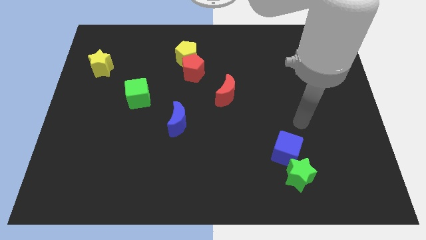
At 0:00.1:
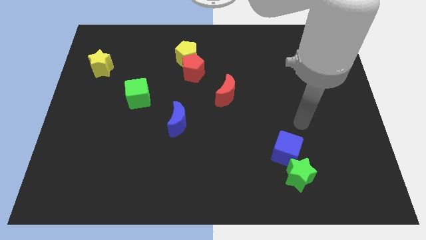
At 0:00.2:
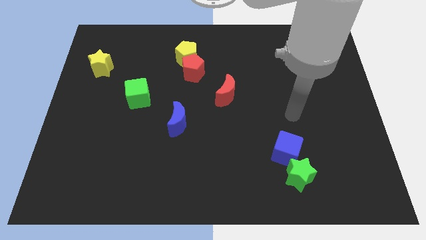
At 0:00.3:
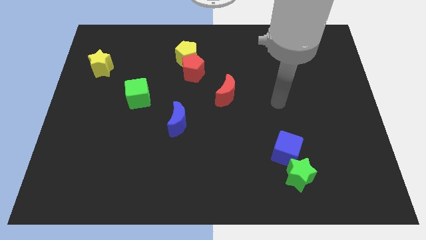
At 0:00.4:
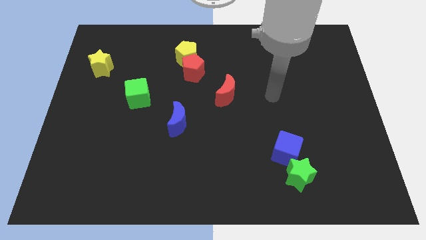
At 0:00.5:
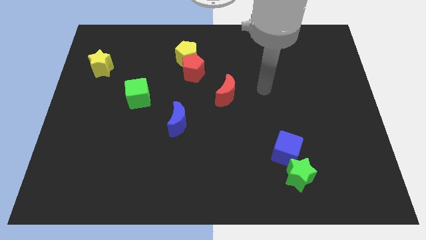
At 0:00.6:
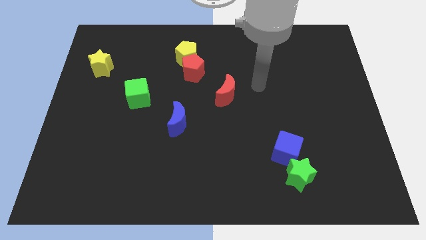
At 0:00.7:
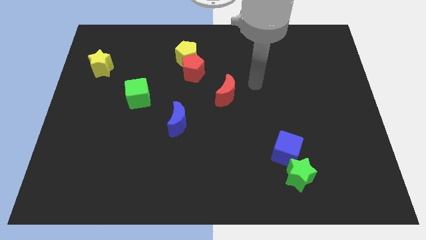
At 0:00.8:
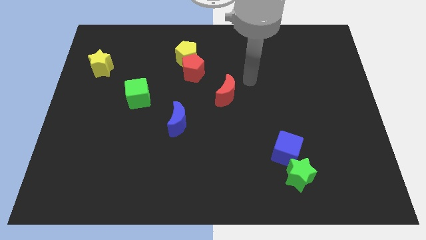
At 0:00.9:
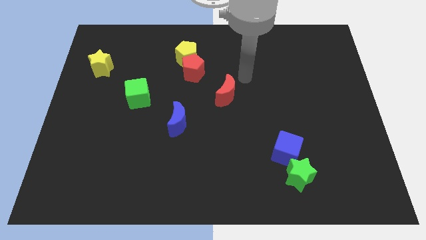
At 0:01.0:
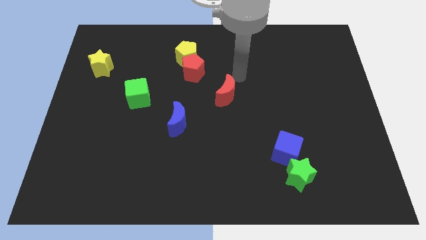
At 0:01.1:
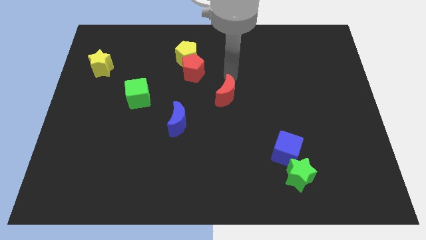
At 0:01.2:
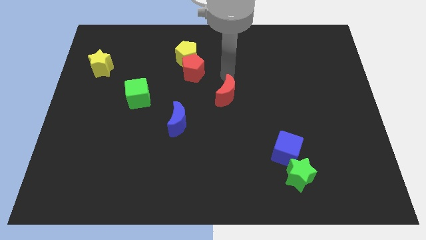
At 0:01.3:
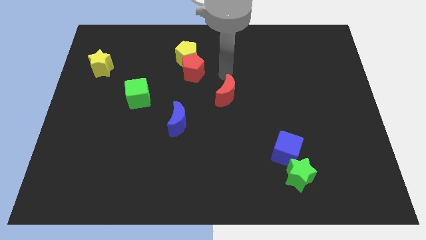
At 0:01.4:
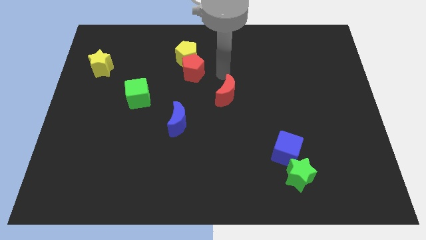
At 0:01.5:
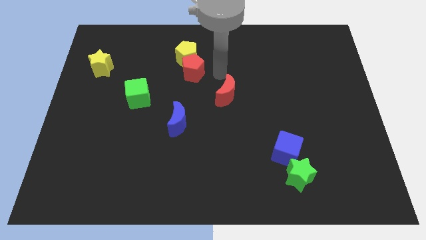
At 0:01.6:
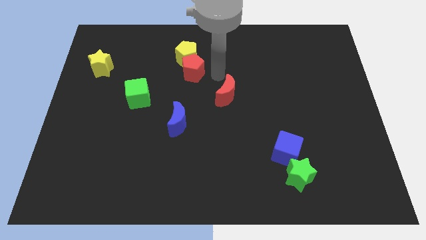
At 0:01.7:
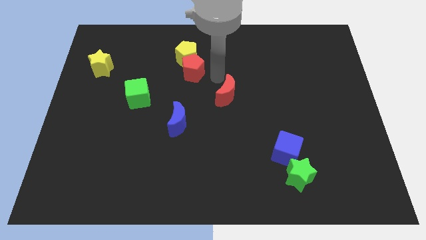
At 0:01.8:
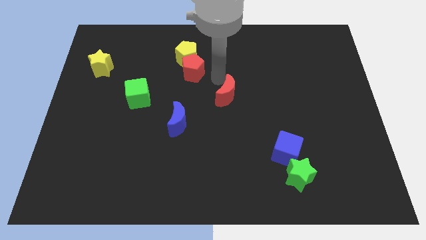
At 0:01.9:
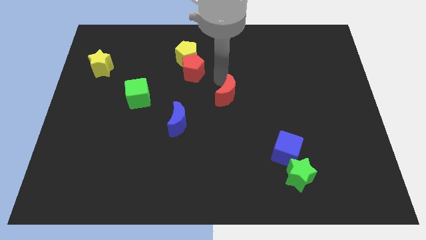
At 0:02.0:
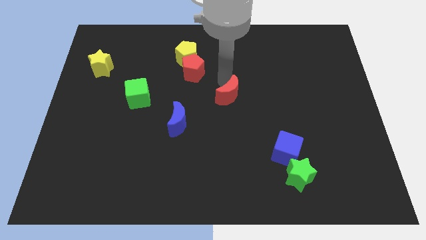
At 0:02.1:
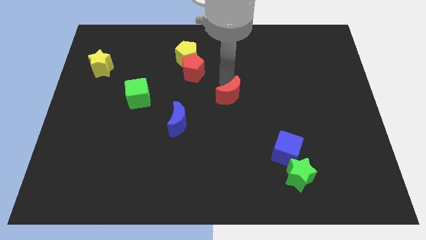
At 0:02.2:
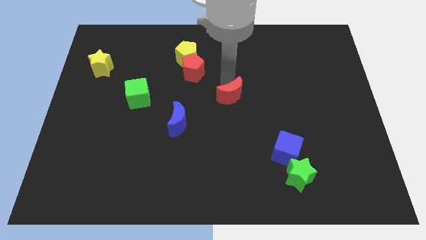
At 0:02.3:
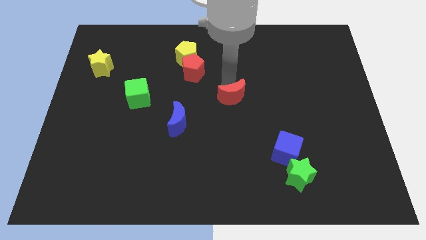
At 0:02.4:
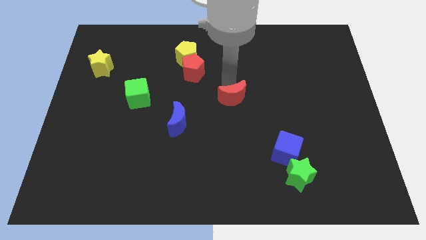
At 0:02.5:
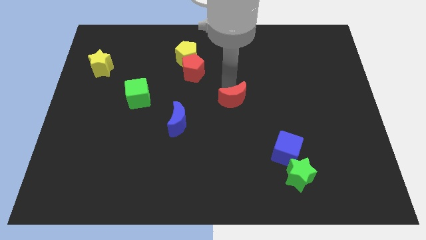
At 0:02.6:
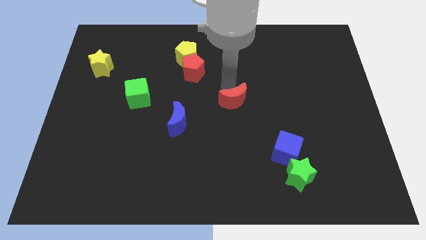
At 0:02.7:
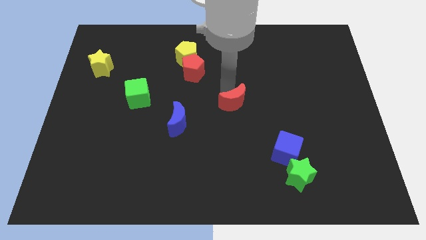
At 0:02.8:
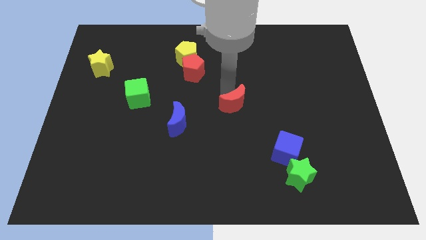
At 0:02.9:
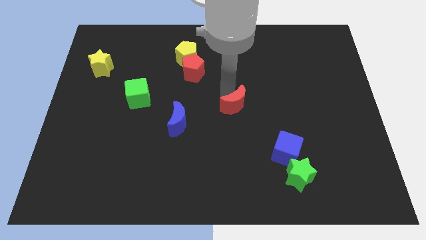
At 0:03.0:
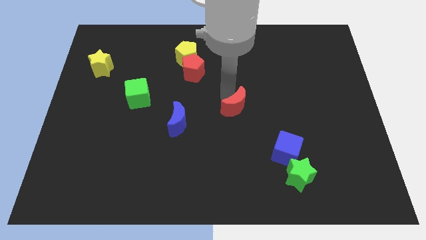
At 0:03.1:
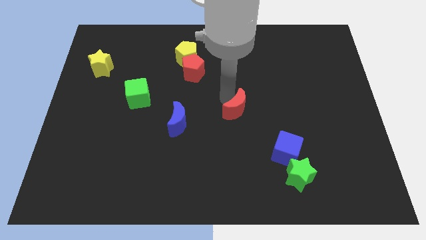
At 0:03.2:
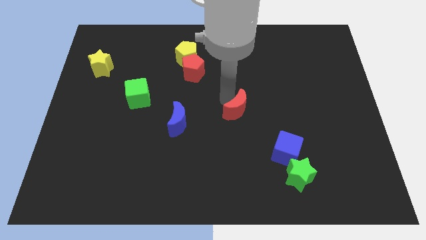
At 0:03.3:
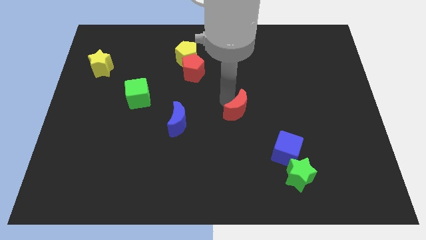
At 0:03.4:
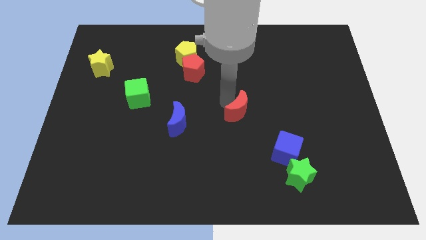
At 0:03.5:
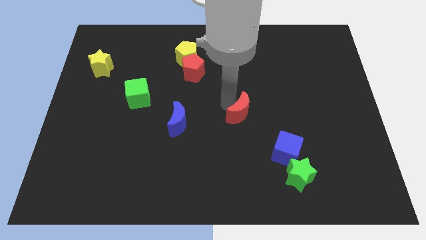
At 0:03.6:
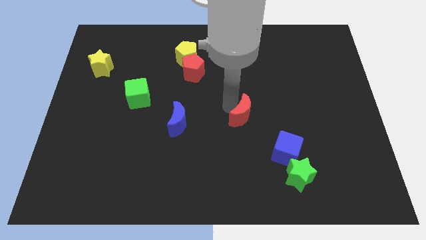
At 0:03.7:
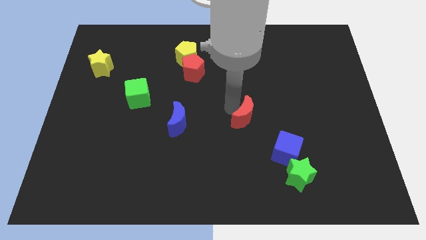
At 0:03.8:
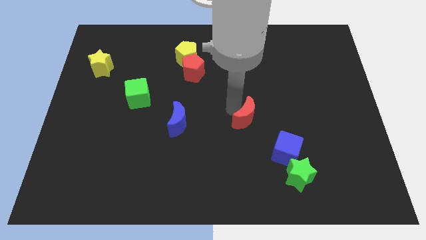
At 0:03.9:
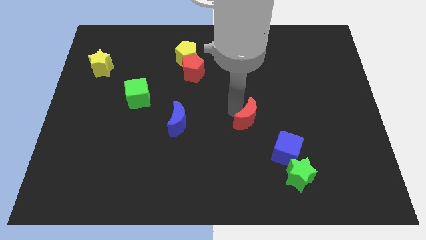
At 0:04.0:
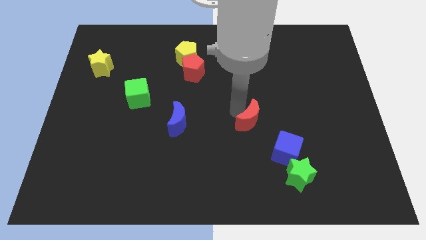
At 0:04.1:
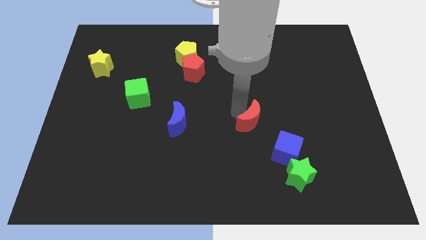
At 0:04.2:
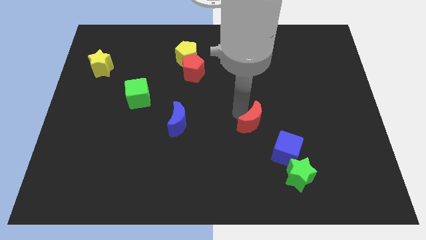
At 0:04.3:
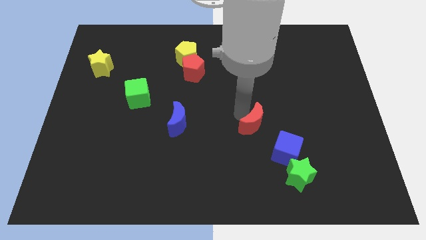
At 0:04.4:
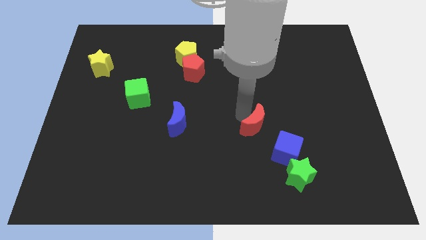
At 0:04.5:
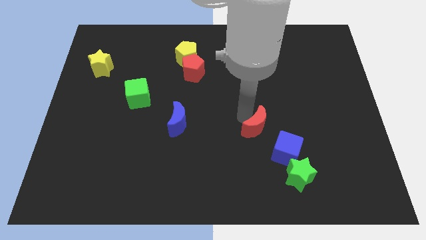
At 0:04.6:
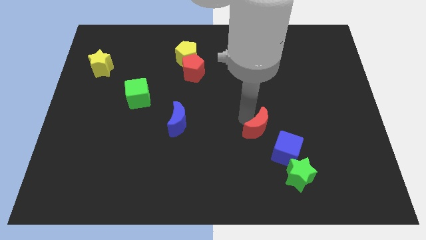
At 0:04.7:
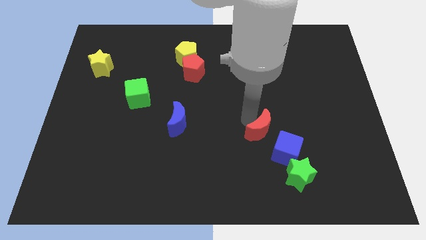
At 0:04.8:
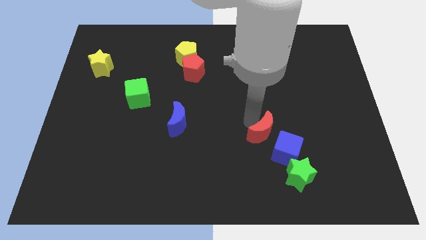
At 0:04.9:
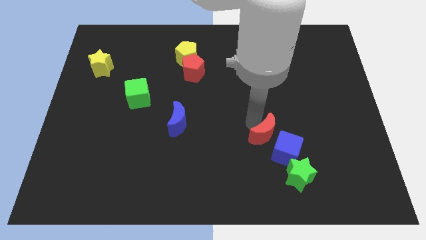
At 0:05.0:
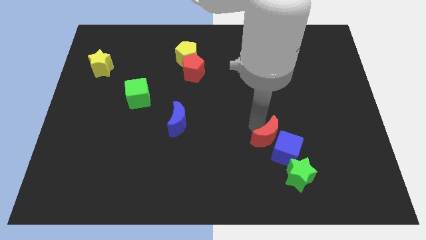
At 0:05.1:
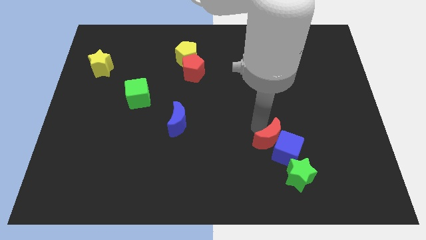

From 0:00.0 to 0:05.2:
slide the red moon close to the blue cube

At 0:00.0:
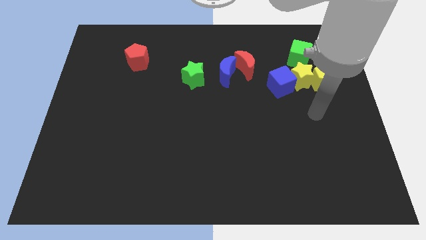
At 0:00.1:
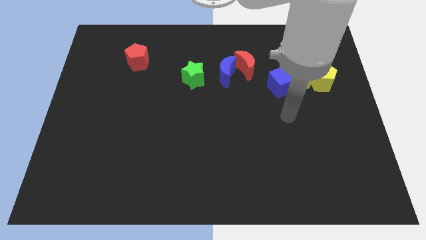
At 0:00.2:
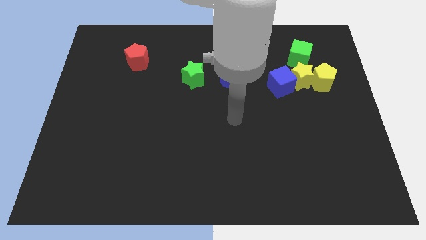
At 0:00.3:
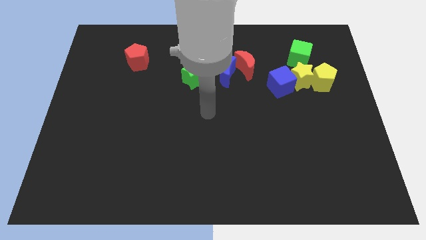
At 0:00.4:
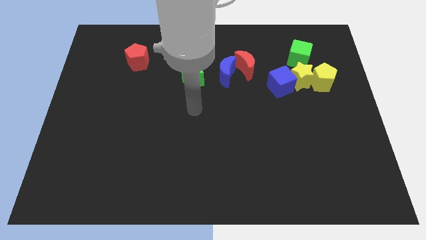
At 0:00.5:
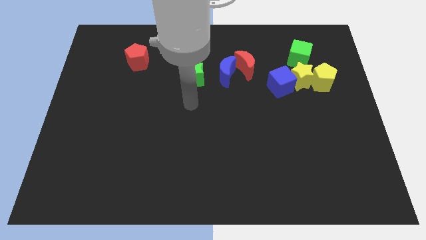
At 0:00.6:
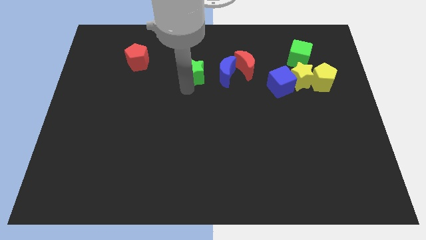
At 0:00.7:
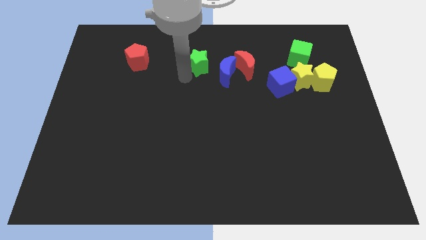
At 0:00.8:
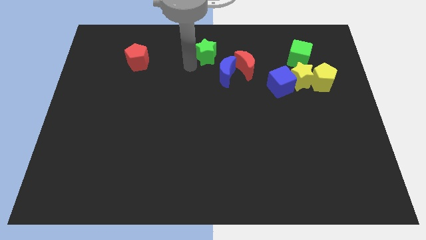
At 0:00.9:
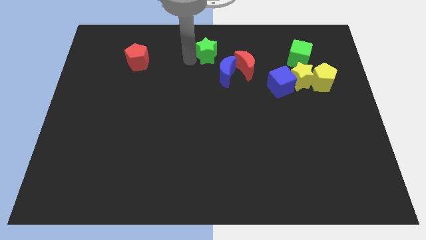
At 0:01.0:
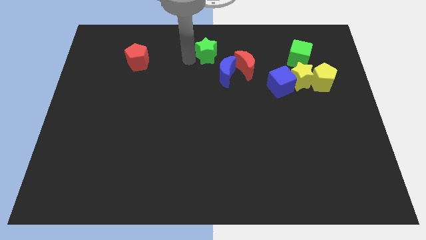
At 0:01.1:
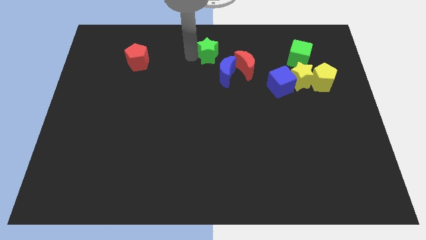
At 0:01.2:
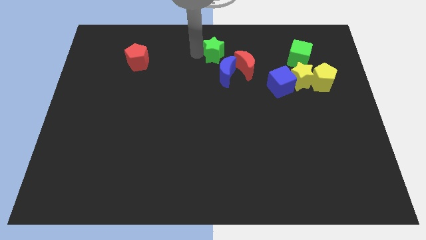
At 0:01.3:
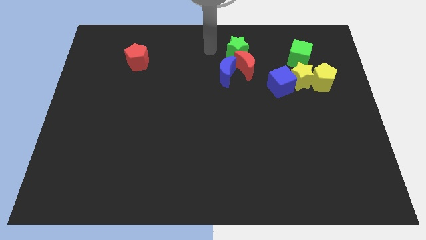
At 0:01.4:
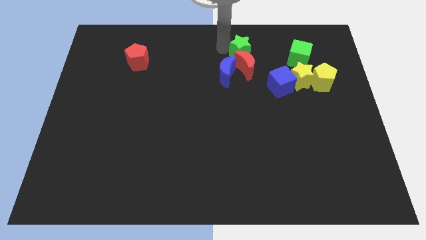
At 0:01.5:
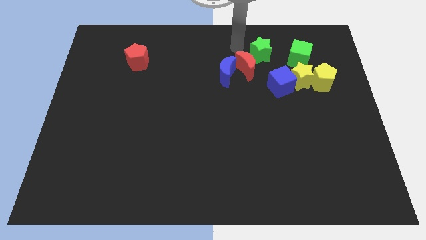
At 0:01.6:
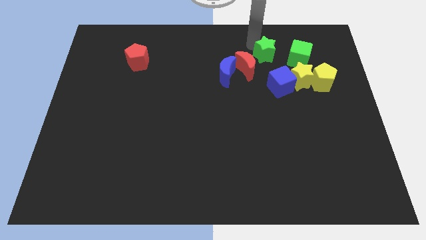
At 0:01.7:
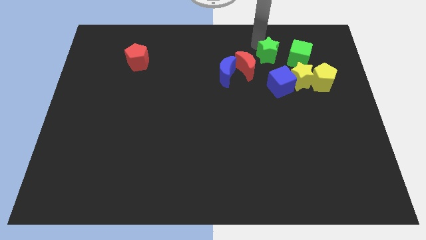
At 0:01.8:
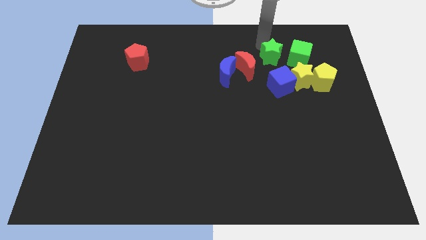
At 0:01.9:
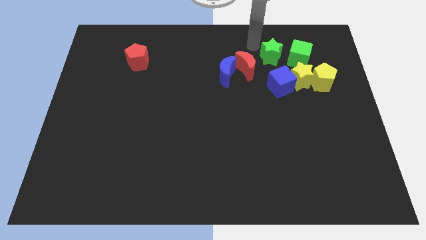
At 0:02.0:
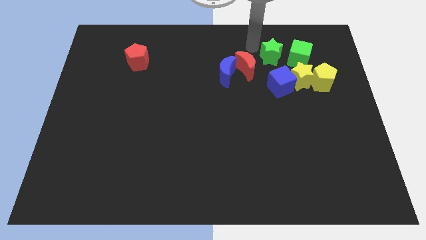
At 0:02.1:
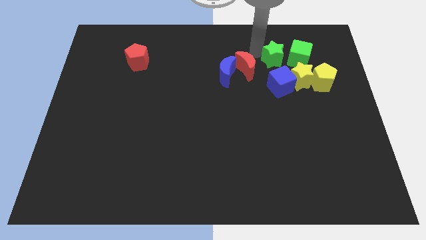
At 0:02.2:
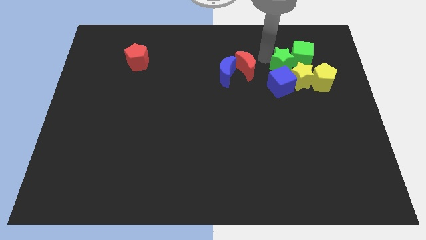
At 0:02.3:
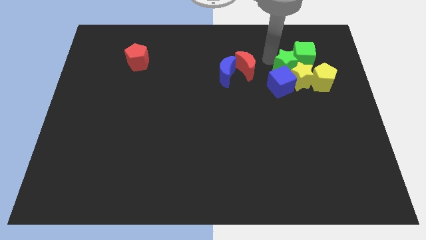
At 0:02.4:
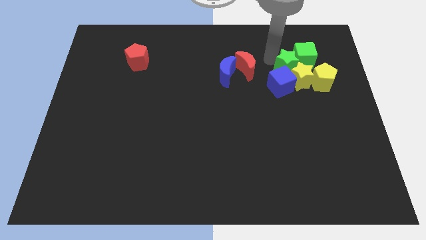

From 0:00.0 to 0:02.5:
move the green star towards the green cube

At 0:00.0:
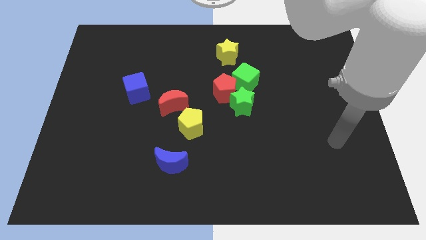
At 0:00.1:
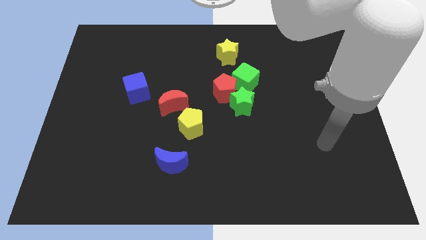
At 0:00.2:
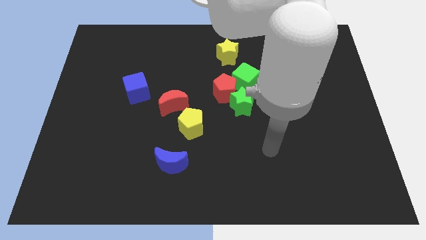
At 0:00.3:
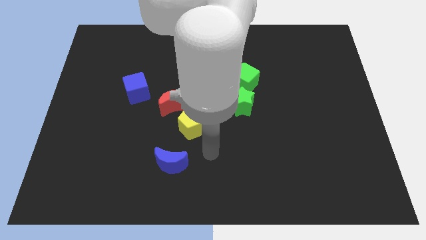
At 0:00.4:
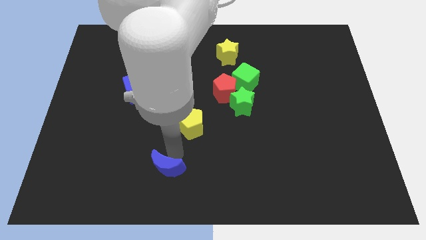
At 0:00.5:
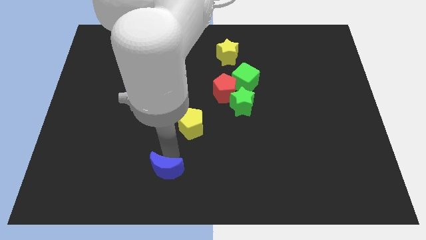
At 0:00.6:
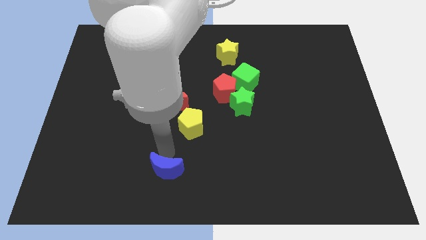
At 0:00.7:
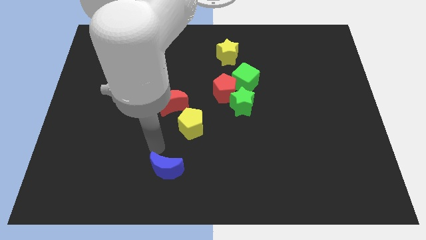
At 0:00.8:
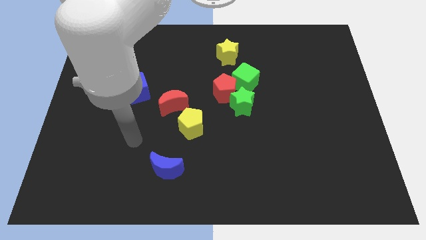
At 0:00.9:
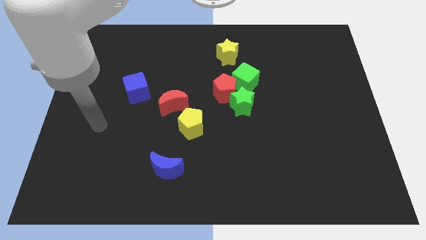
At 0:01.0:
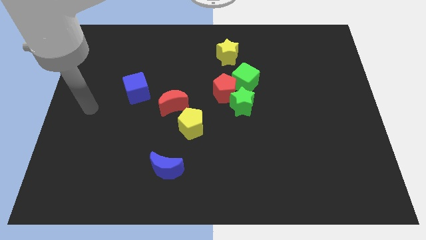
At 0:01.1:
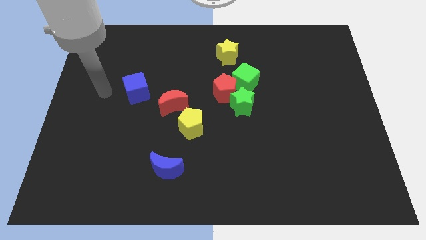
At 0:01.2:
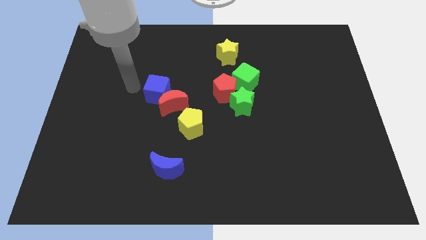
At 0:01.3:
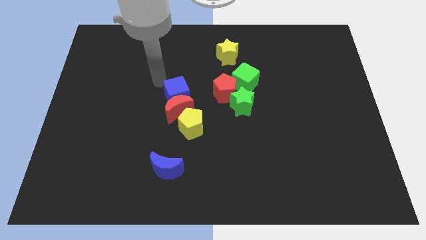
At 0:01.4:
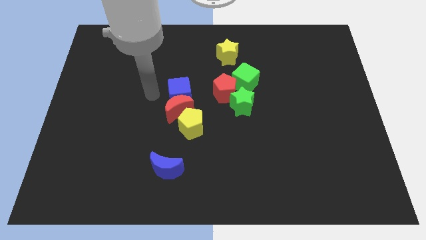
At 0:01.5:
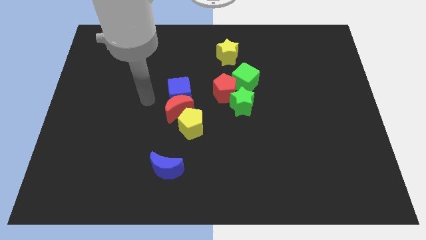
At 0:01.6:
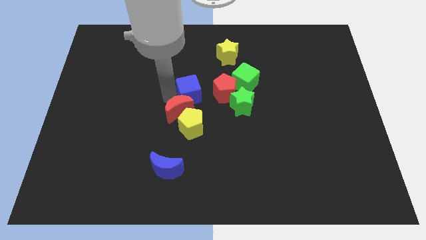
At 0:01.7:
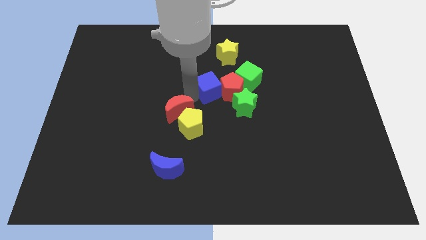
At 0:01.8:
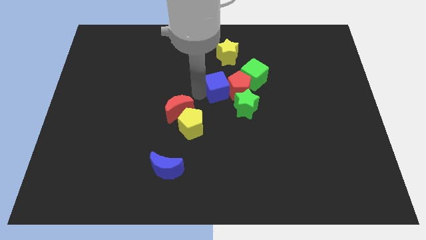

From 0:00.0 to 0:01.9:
push the blue cube close to the red pentagon
